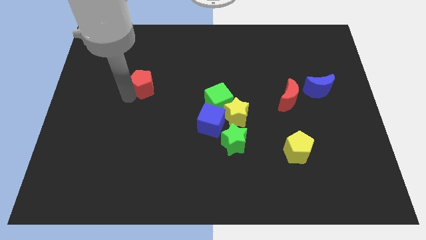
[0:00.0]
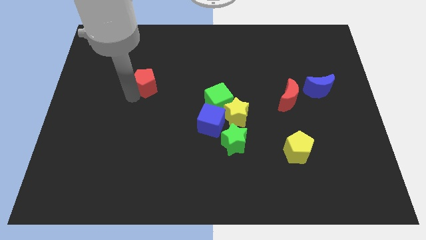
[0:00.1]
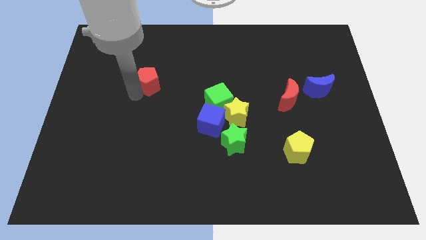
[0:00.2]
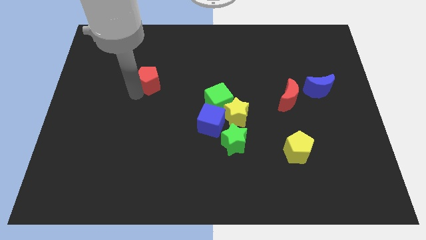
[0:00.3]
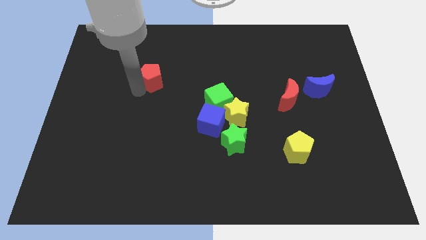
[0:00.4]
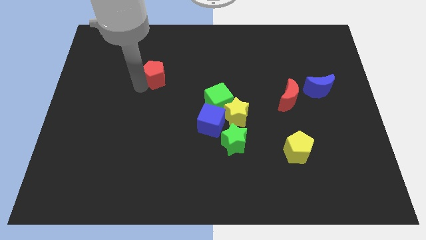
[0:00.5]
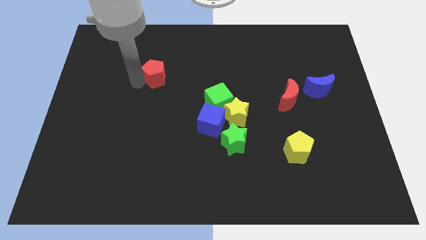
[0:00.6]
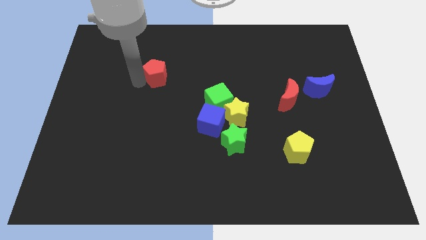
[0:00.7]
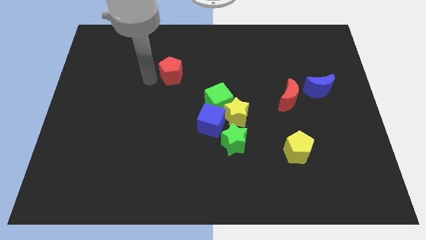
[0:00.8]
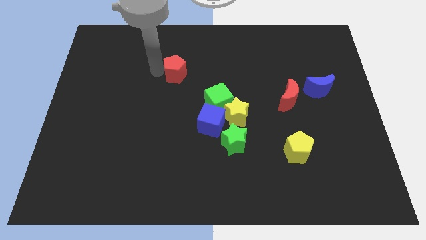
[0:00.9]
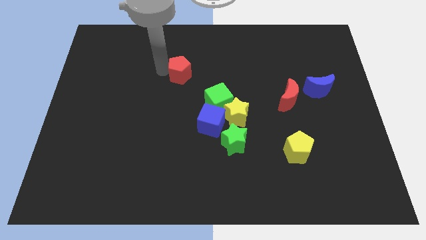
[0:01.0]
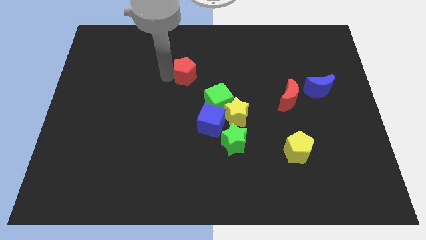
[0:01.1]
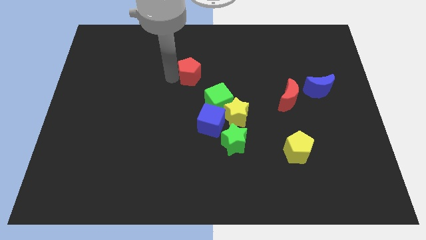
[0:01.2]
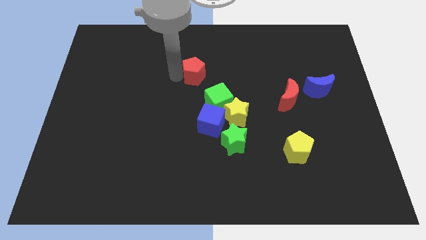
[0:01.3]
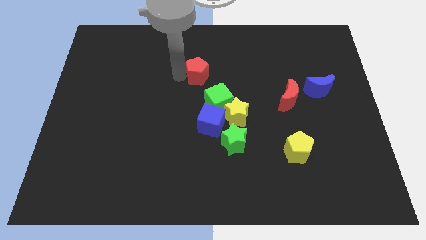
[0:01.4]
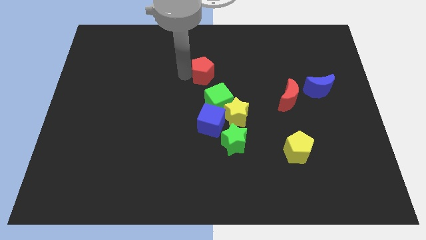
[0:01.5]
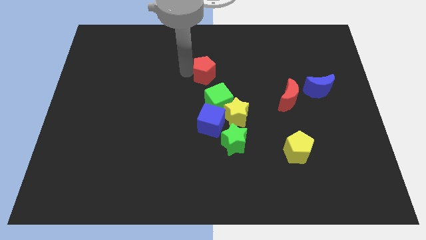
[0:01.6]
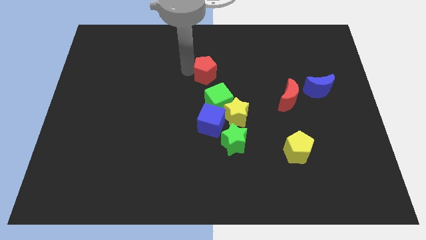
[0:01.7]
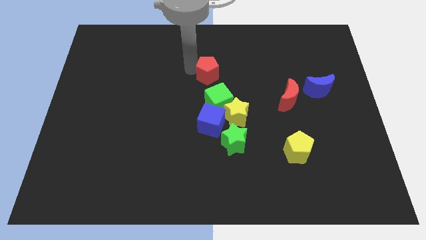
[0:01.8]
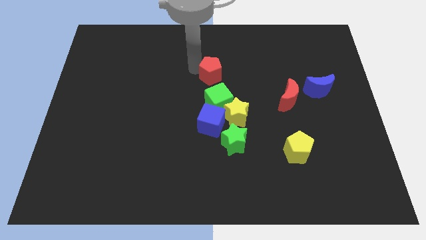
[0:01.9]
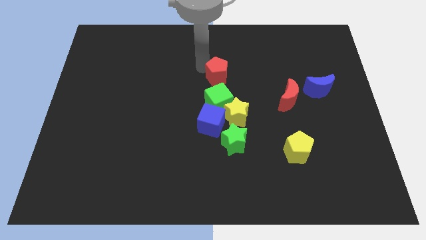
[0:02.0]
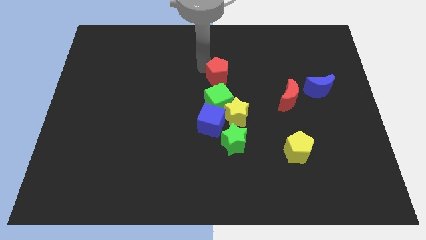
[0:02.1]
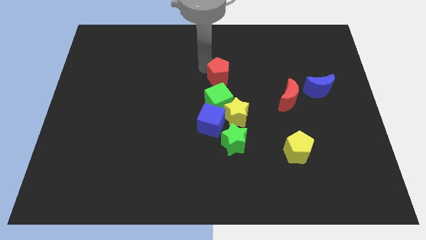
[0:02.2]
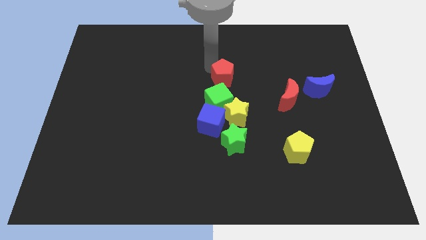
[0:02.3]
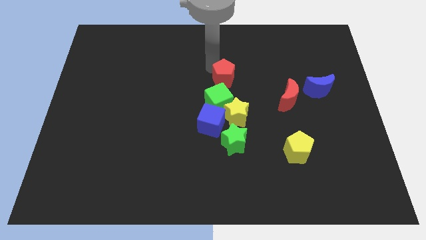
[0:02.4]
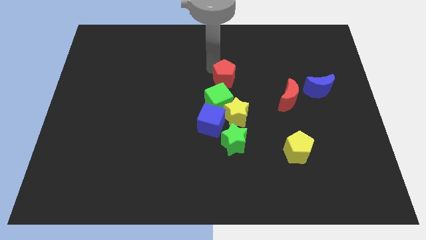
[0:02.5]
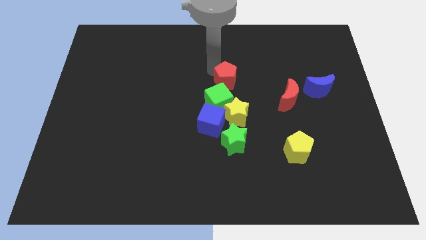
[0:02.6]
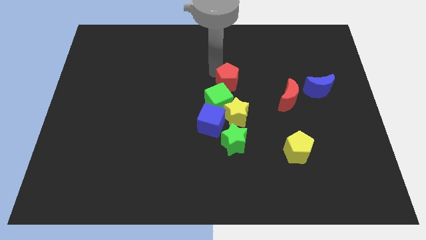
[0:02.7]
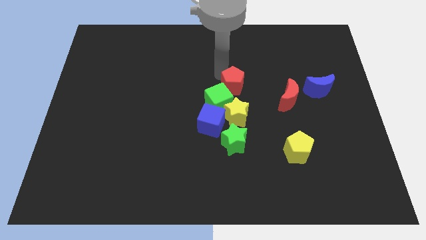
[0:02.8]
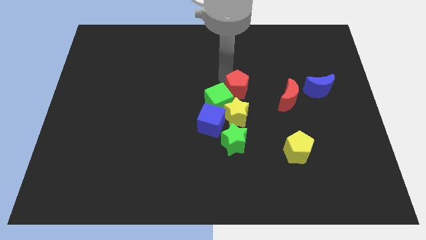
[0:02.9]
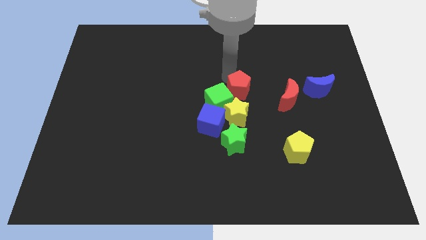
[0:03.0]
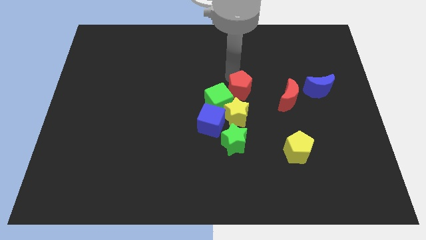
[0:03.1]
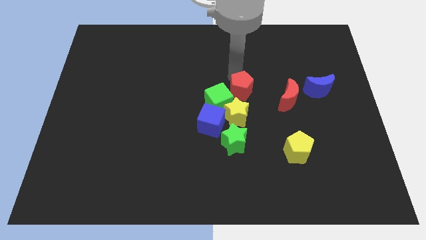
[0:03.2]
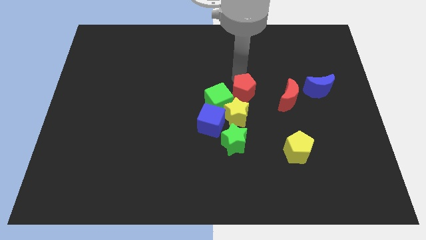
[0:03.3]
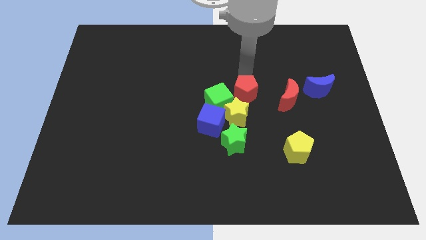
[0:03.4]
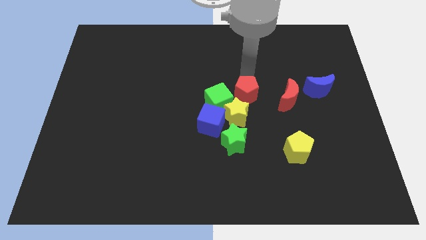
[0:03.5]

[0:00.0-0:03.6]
place red pentagon diagonally top right to the yellow star

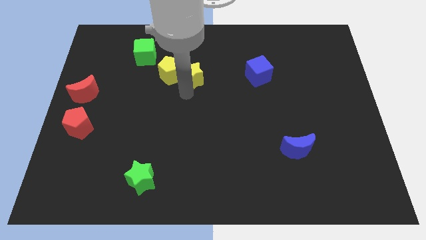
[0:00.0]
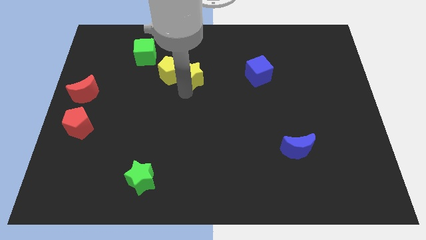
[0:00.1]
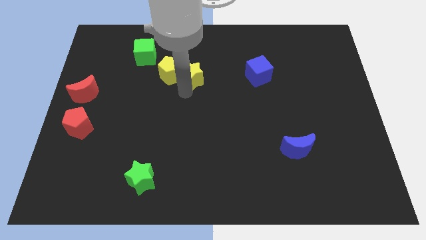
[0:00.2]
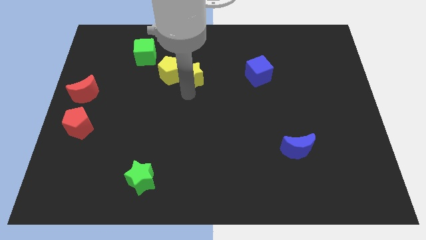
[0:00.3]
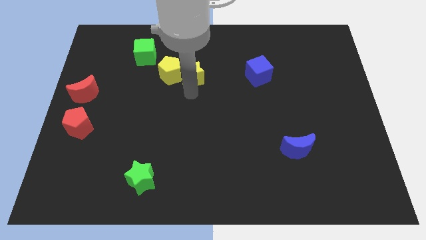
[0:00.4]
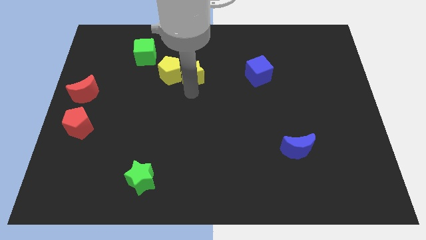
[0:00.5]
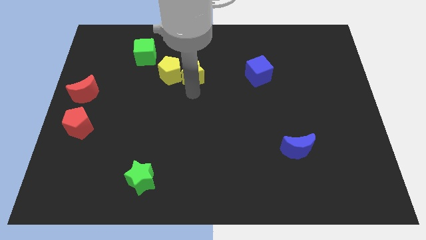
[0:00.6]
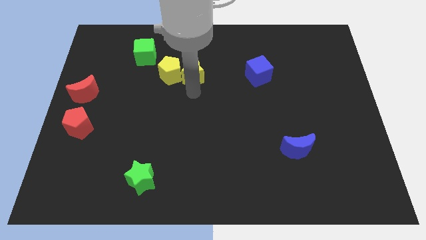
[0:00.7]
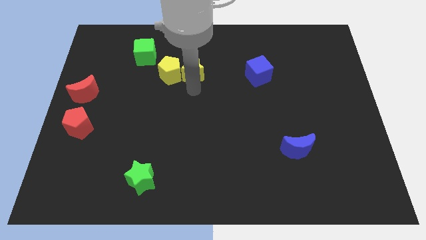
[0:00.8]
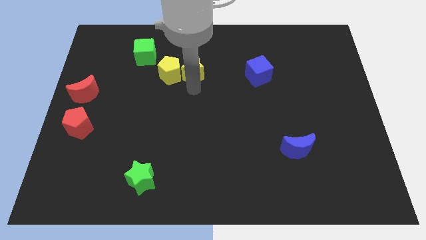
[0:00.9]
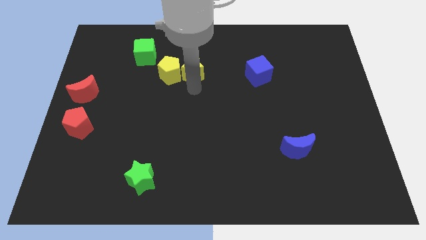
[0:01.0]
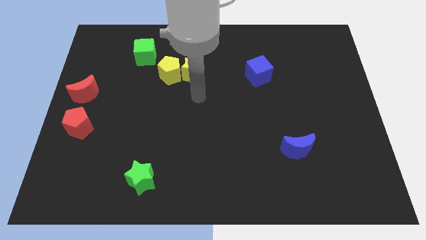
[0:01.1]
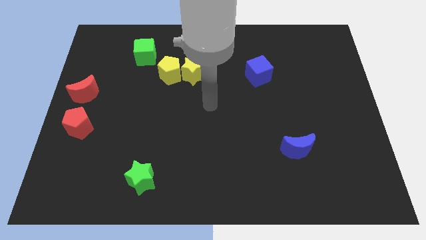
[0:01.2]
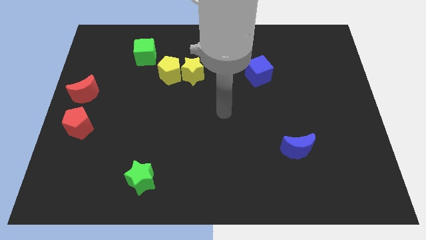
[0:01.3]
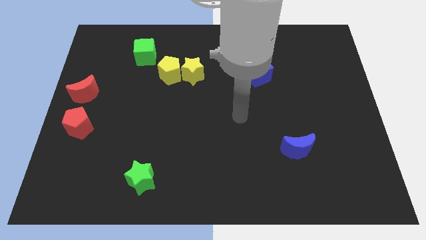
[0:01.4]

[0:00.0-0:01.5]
slide the yellow star slightly upwards

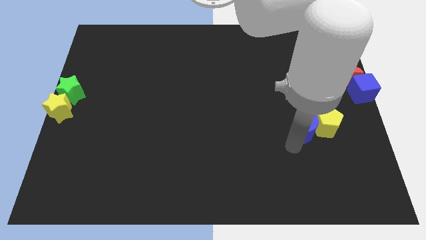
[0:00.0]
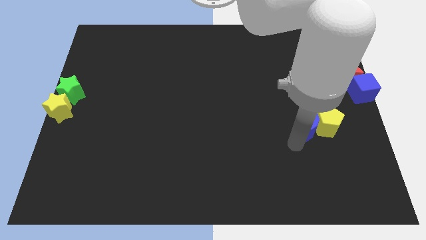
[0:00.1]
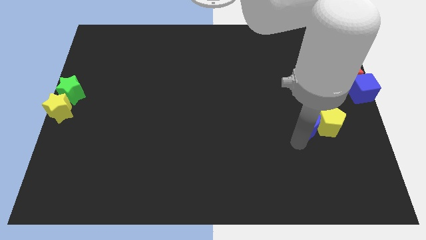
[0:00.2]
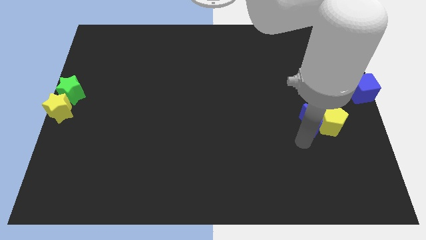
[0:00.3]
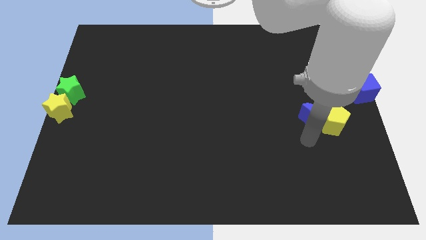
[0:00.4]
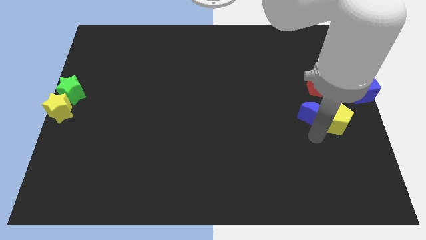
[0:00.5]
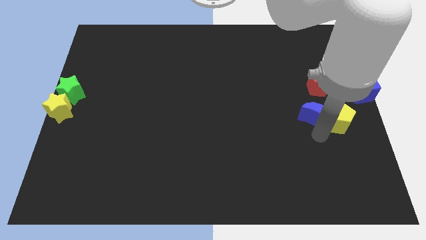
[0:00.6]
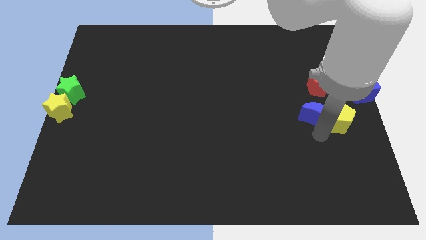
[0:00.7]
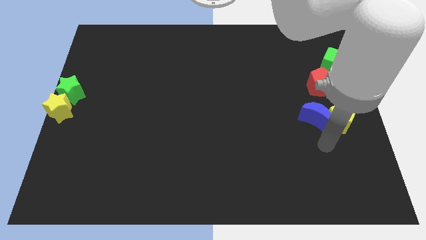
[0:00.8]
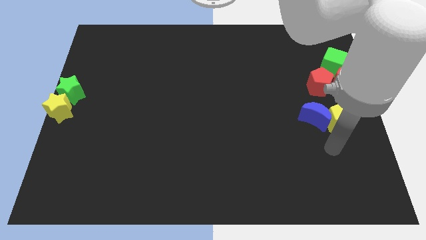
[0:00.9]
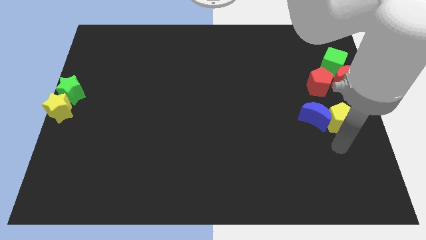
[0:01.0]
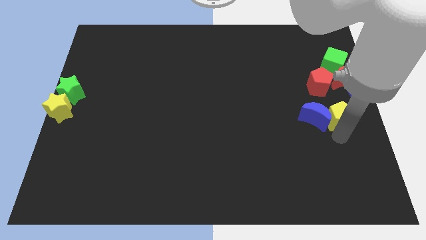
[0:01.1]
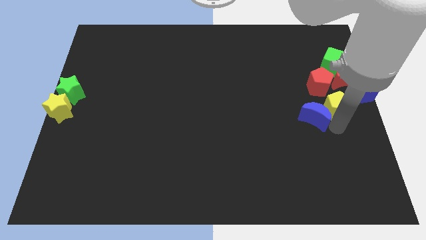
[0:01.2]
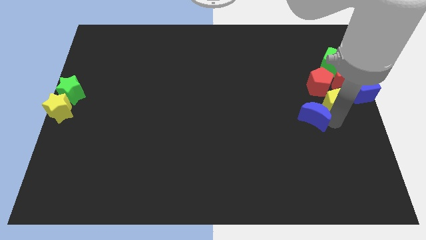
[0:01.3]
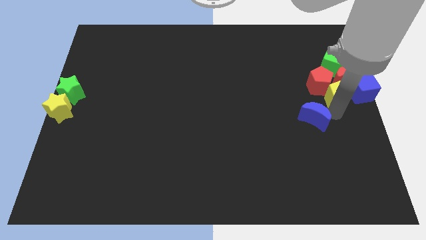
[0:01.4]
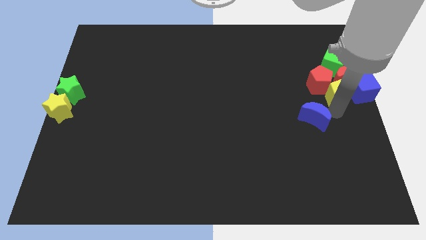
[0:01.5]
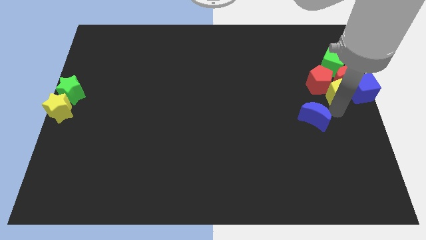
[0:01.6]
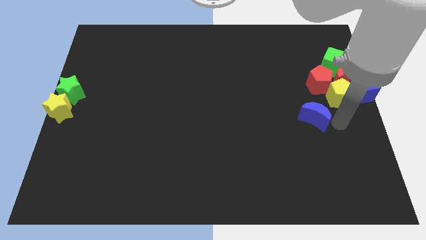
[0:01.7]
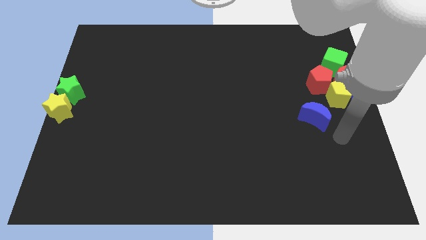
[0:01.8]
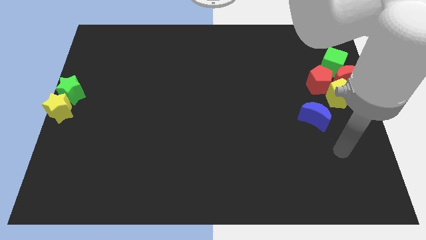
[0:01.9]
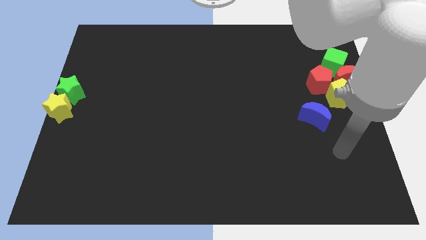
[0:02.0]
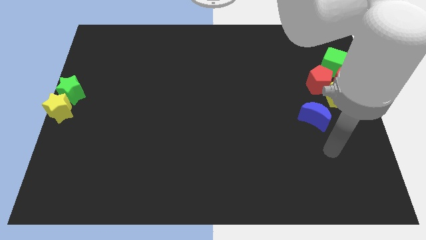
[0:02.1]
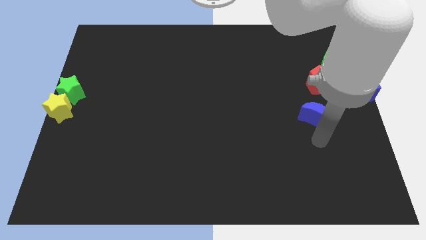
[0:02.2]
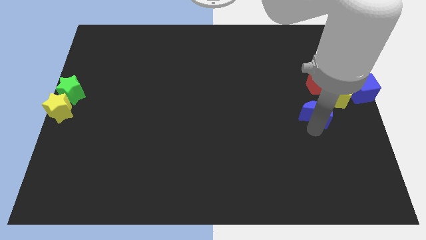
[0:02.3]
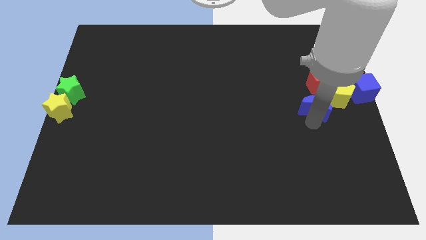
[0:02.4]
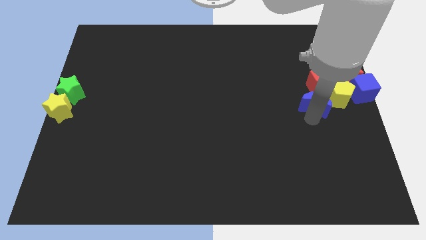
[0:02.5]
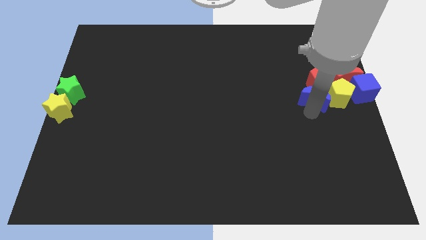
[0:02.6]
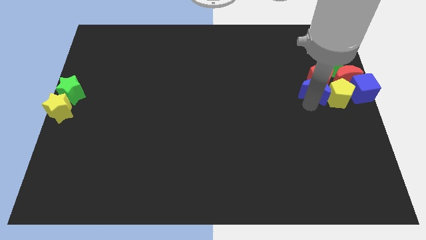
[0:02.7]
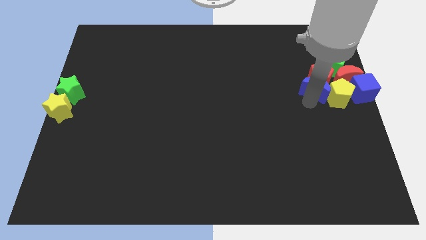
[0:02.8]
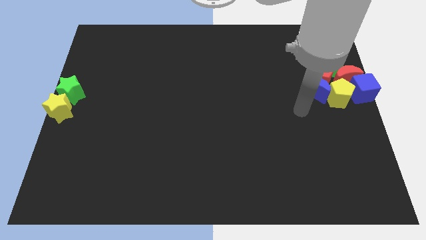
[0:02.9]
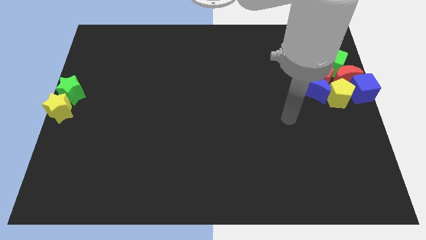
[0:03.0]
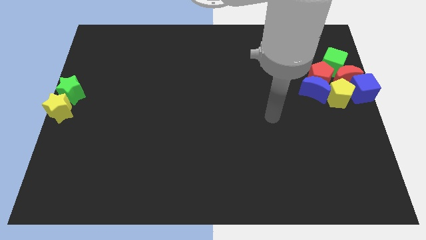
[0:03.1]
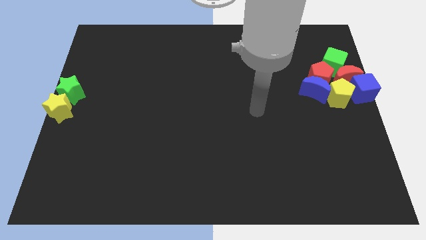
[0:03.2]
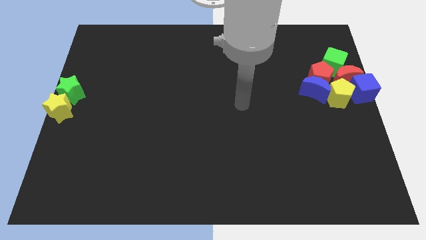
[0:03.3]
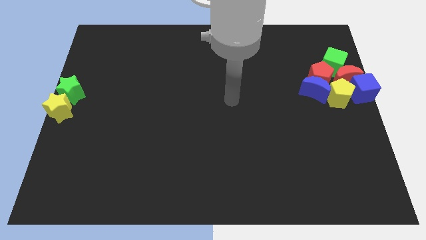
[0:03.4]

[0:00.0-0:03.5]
move blue moon and yellow pentagon below the red blocks

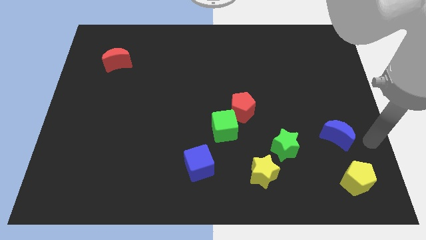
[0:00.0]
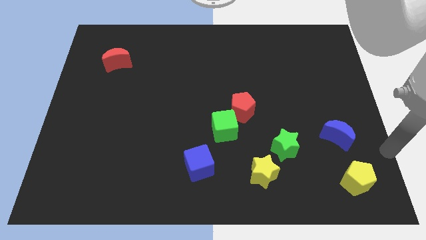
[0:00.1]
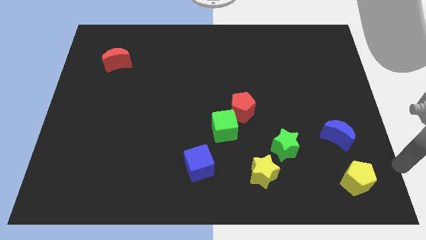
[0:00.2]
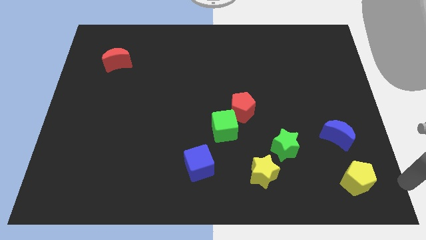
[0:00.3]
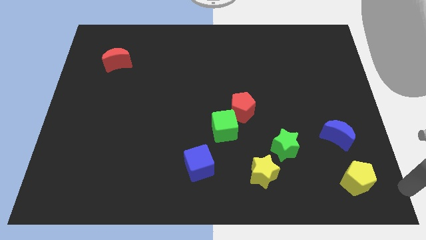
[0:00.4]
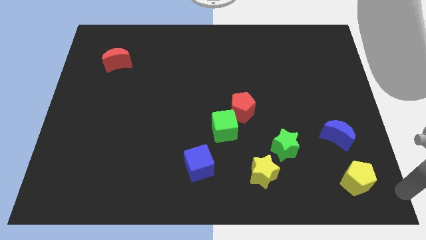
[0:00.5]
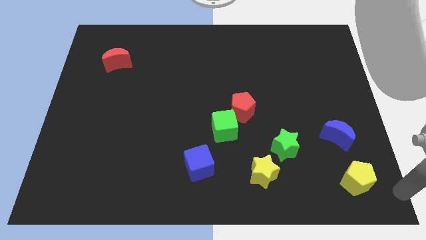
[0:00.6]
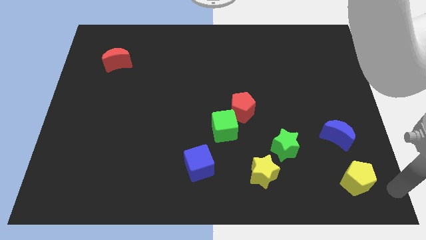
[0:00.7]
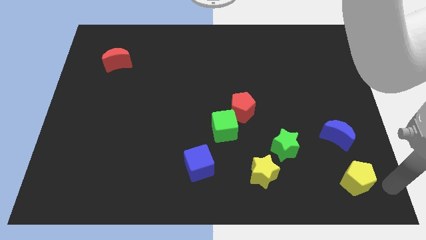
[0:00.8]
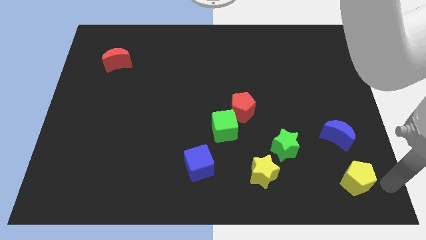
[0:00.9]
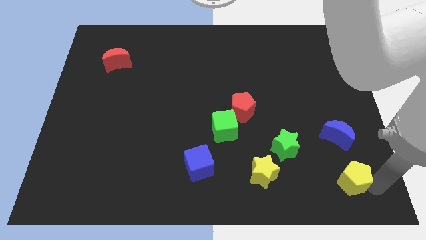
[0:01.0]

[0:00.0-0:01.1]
tap the yellow pentagon
